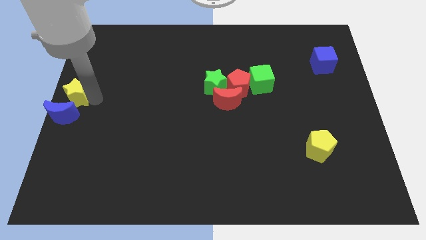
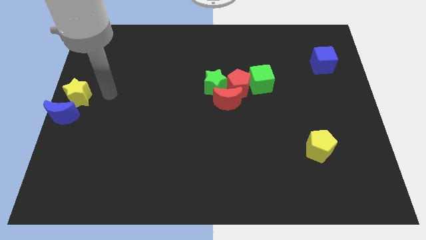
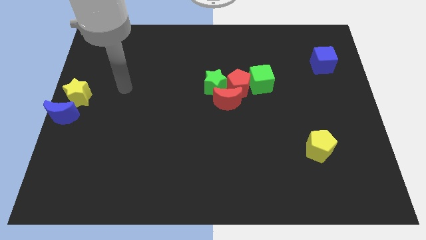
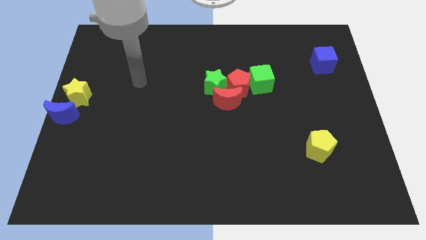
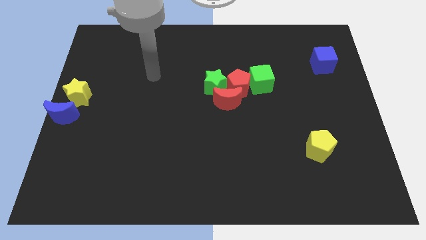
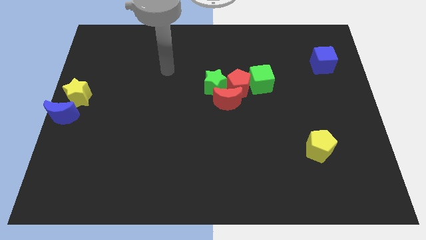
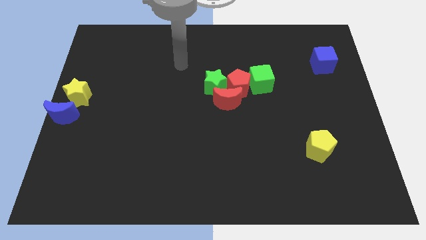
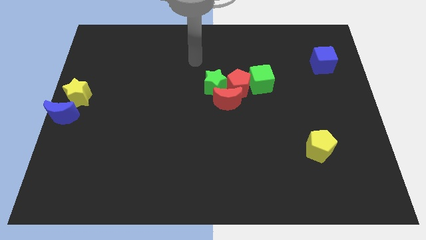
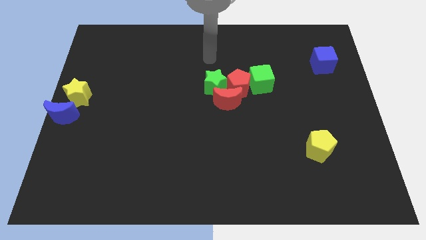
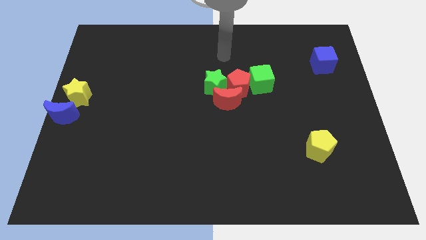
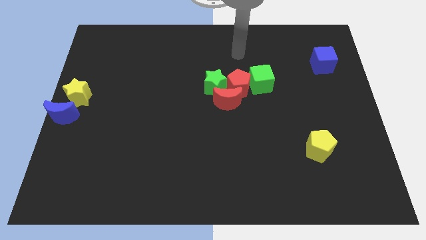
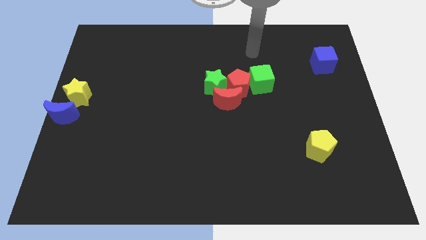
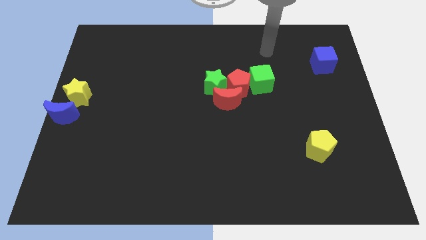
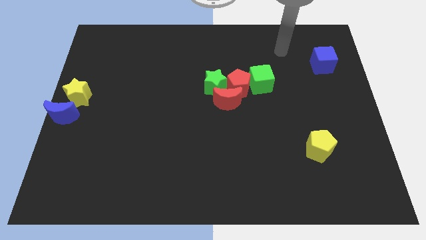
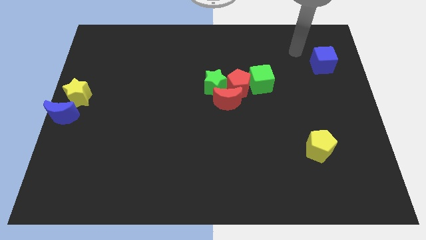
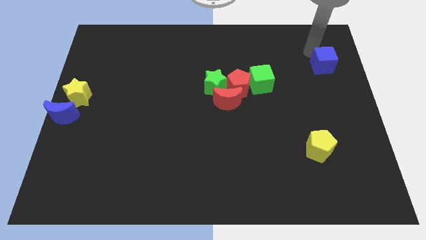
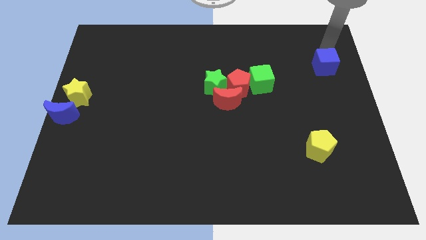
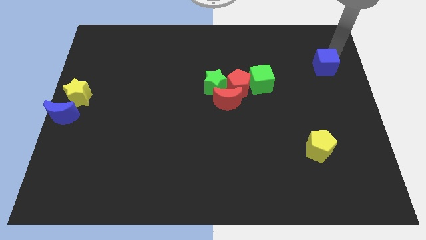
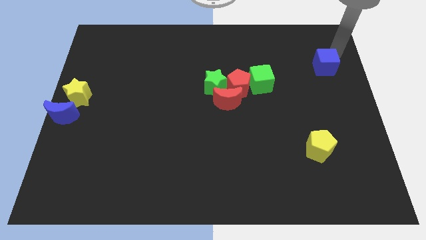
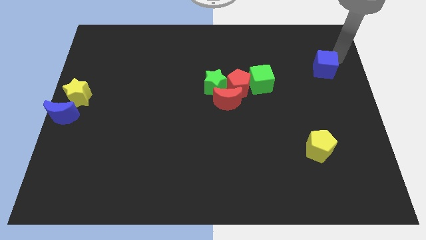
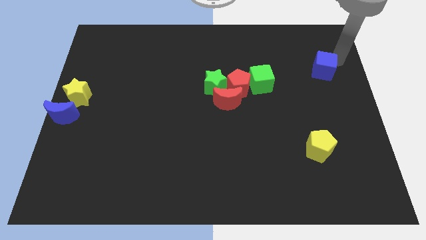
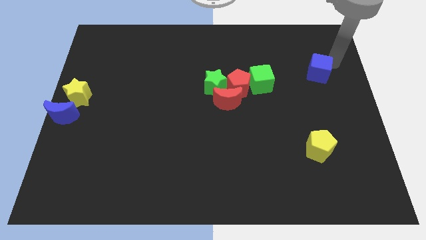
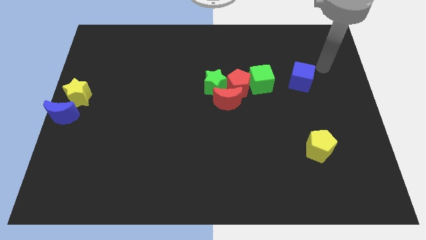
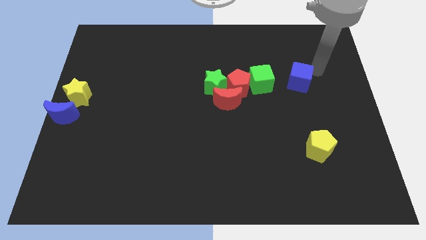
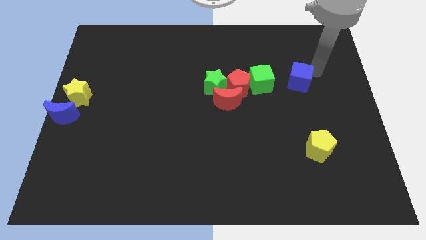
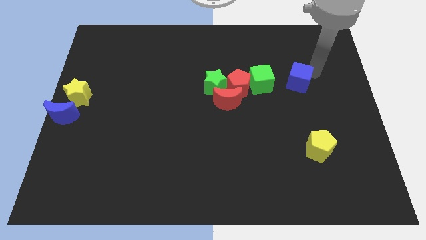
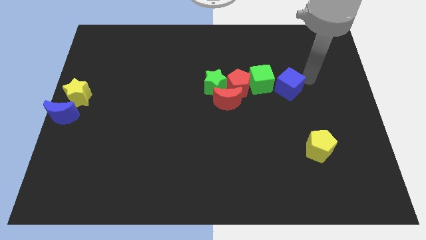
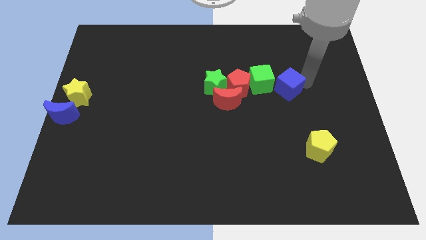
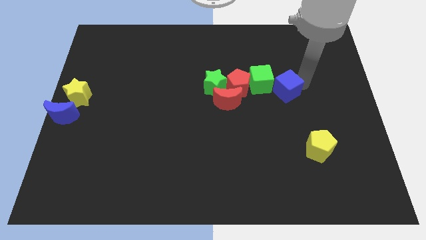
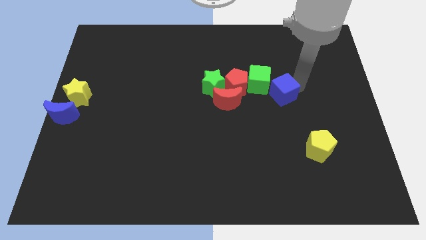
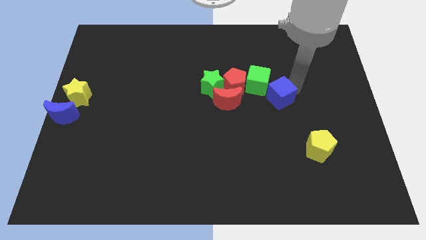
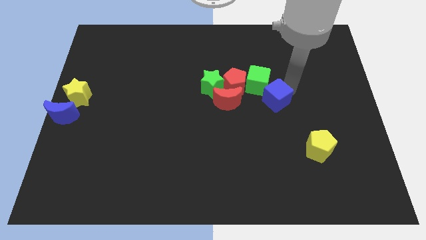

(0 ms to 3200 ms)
put the blue cube diagonally bottom right to the green cube

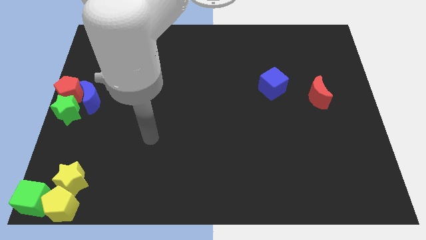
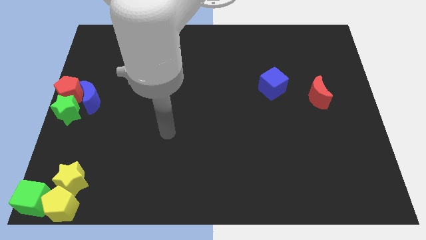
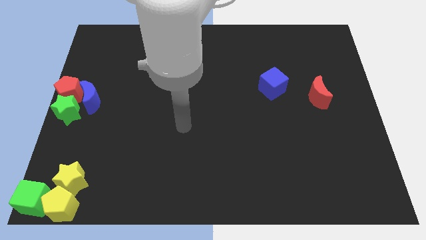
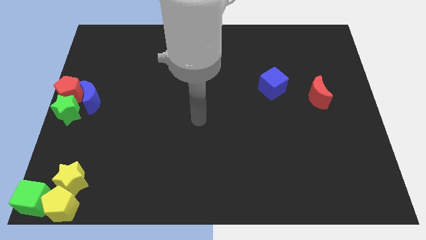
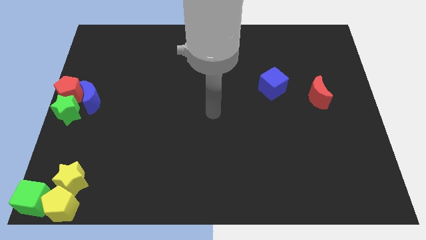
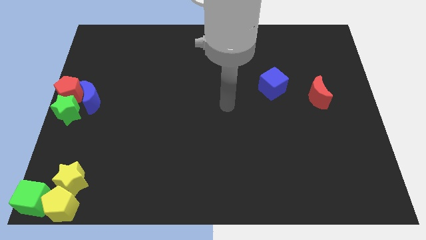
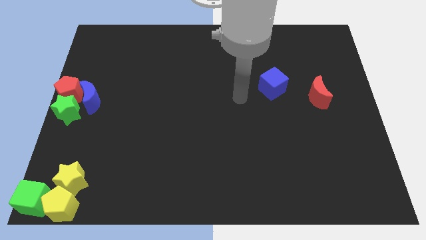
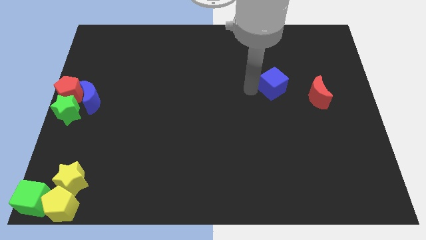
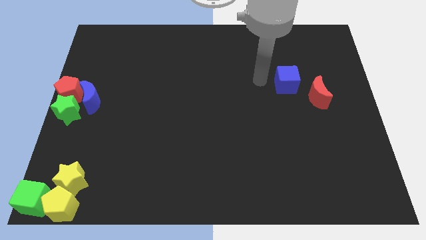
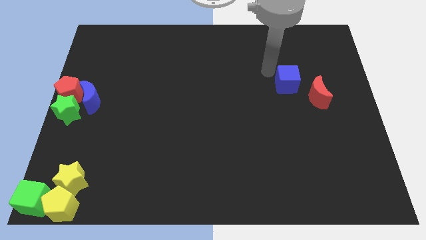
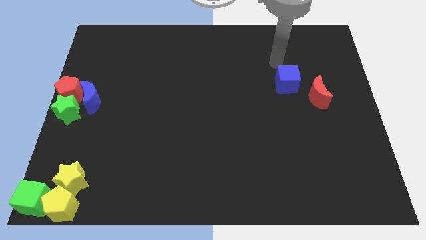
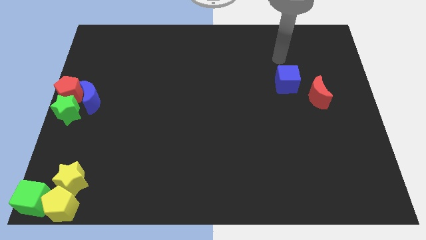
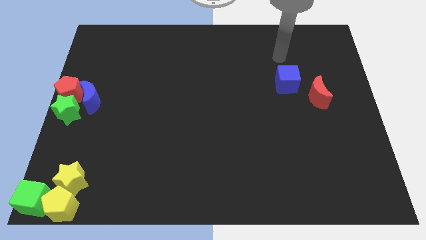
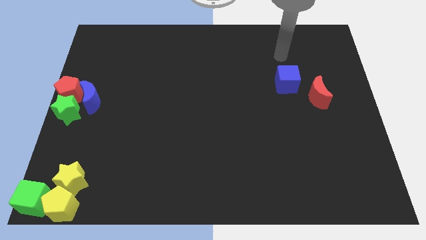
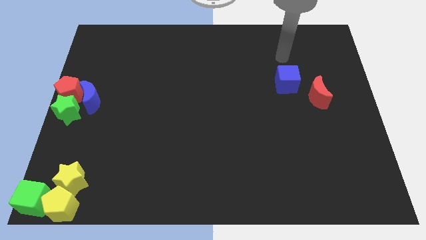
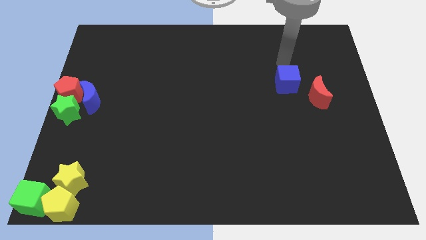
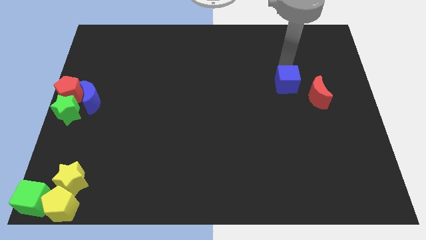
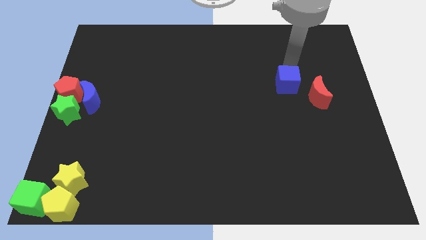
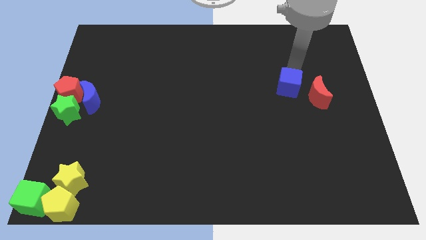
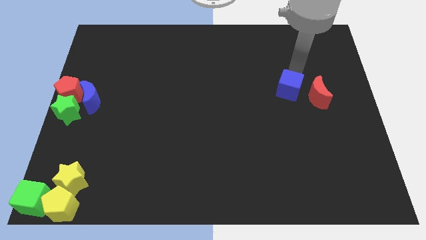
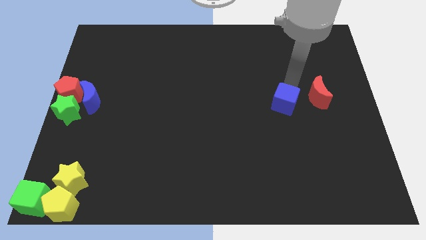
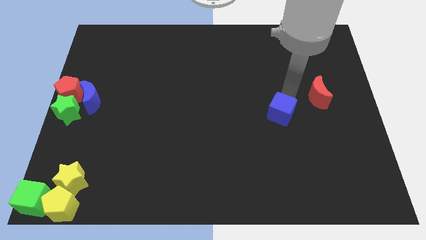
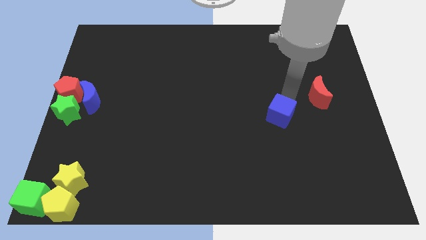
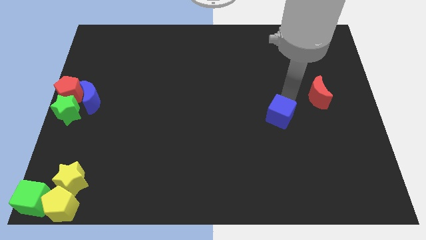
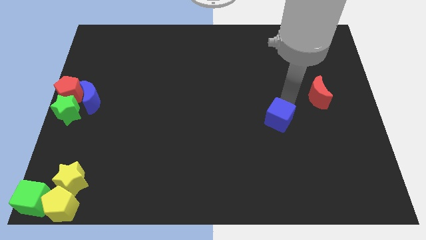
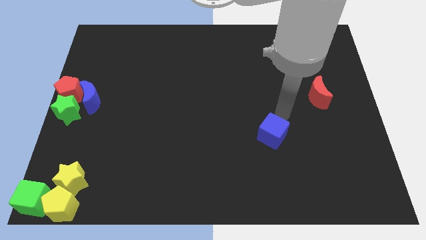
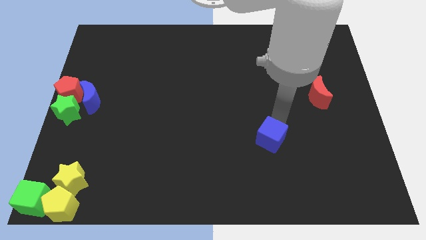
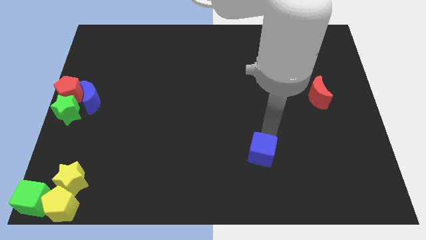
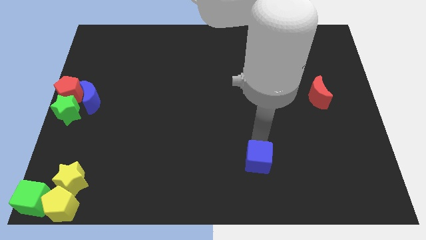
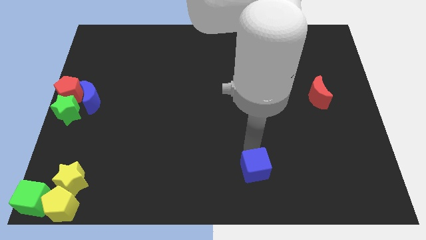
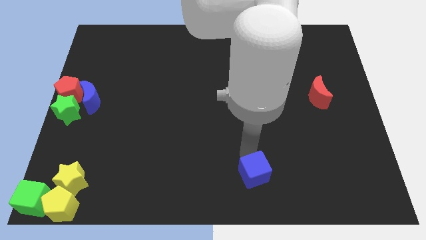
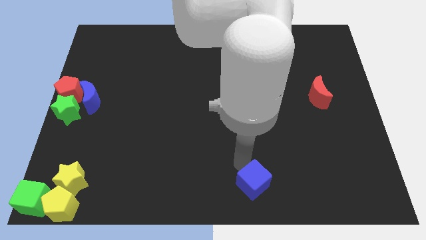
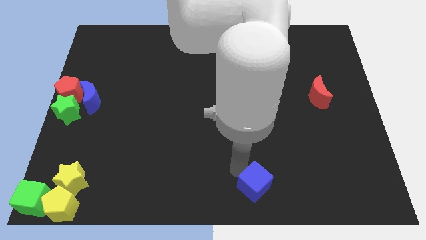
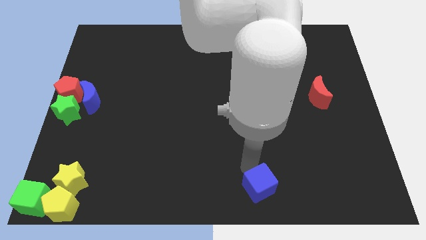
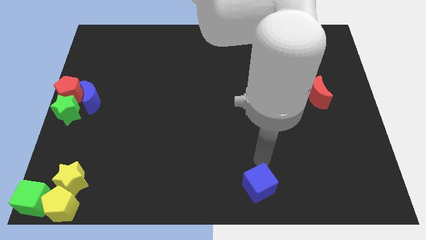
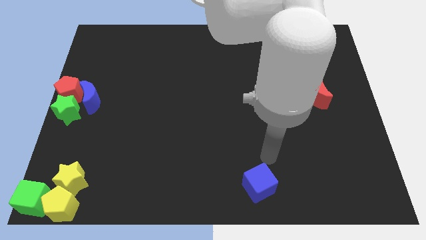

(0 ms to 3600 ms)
push the blue cube towards the bottom center of the board

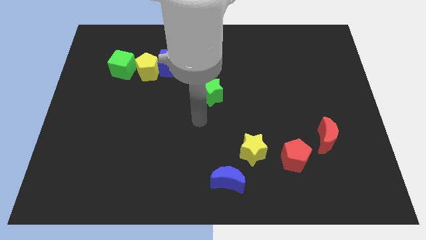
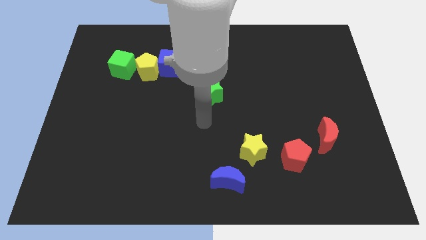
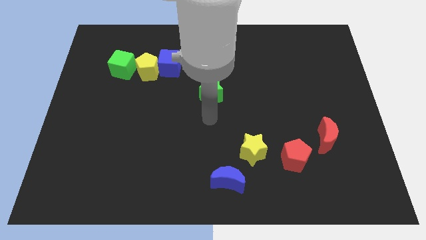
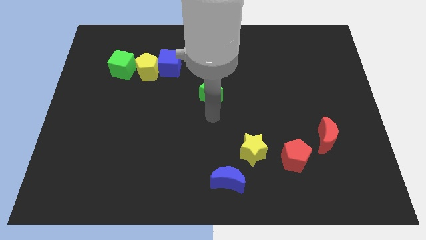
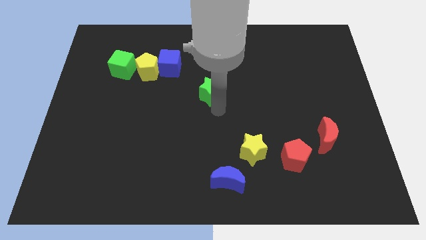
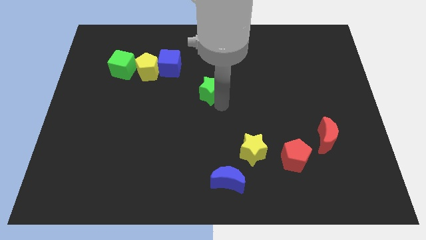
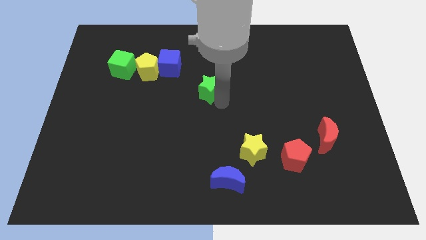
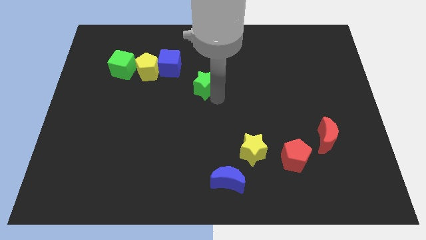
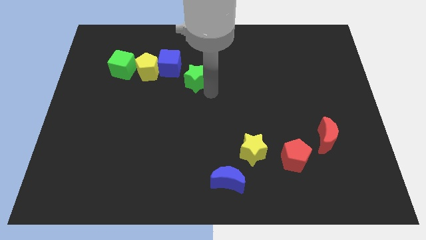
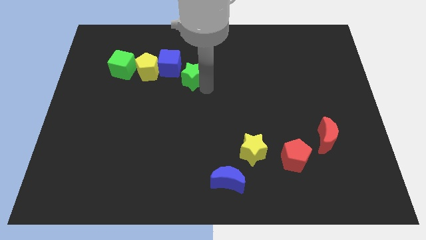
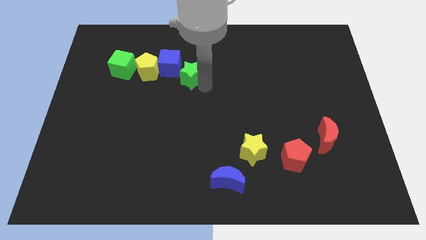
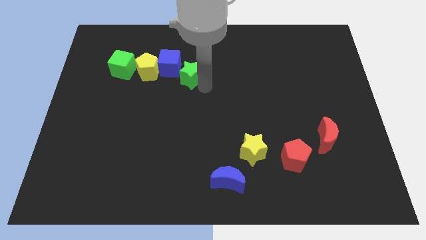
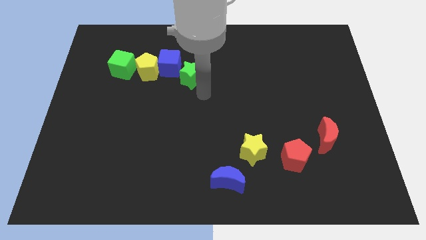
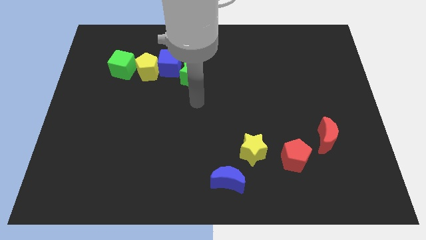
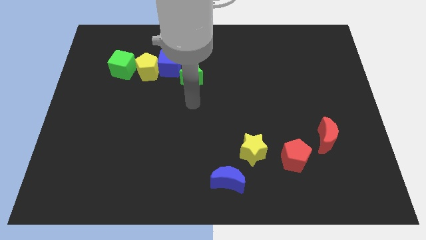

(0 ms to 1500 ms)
push the green star into the blue cube

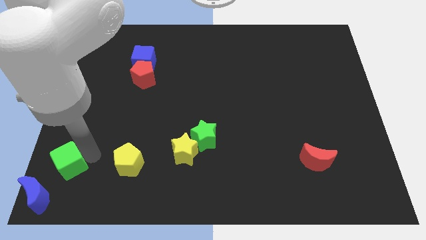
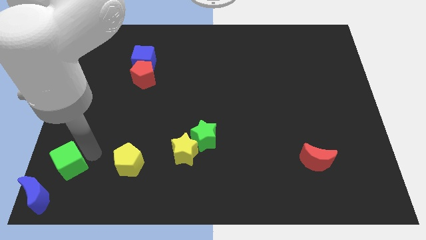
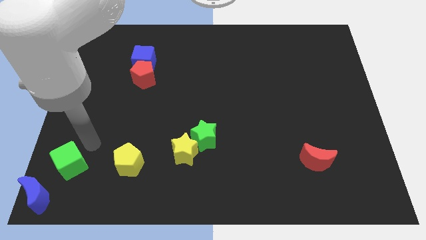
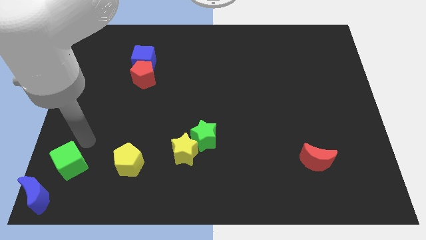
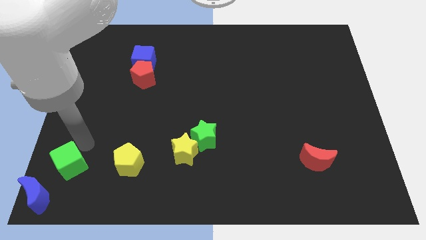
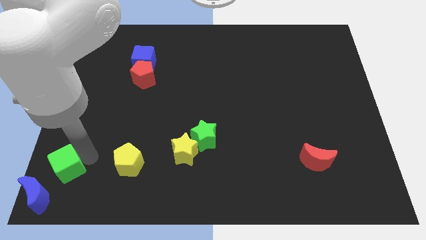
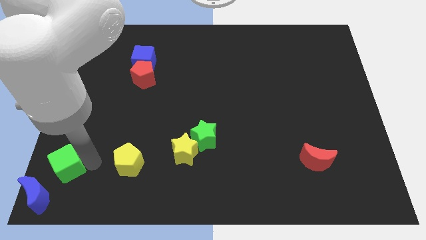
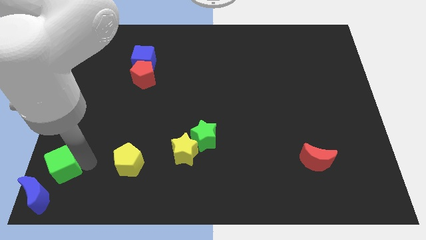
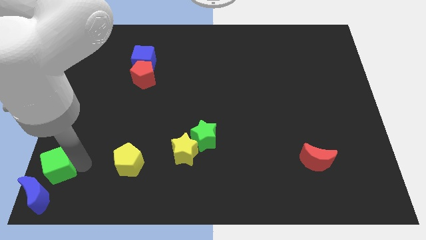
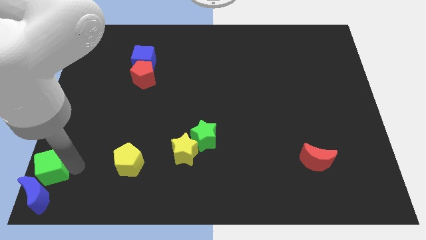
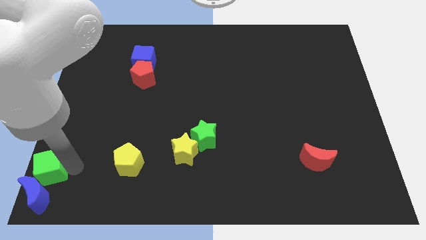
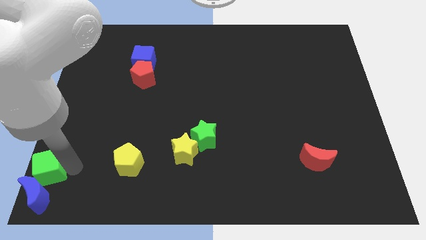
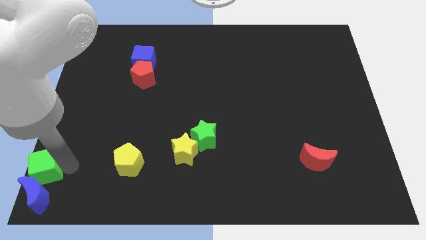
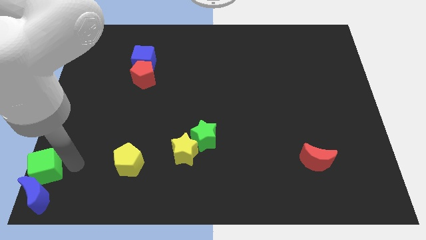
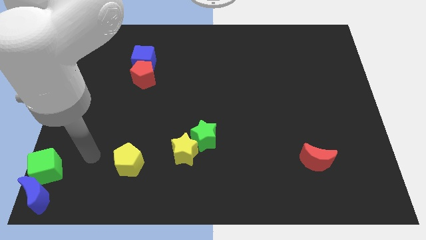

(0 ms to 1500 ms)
place green cube on the top of blue moon
